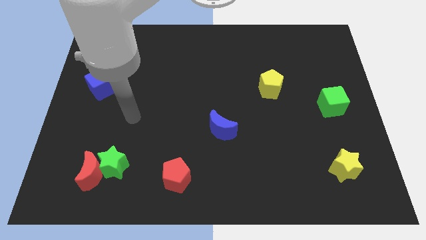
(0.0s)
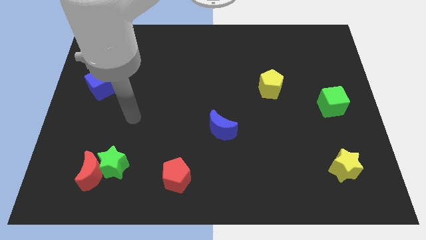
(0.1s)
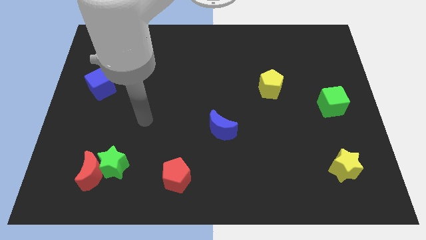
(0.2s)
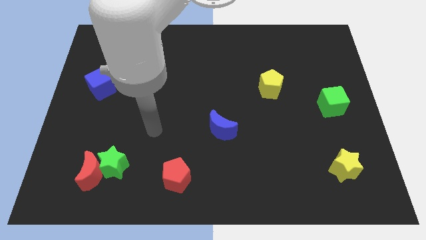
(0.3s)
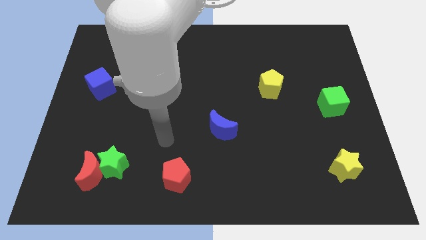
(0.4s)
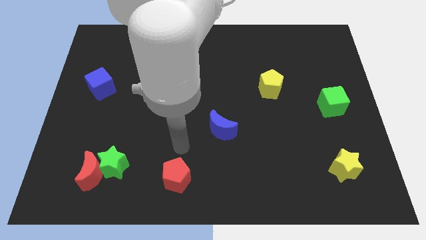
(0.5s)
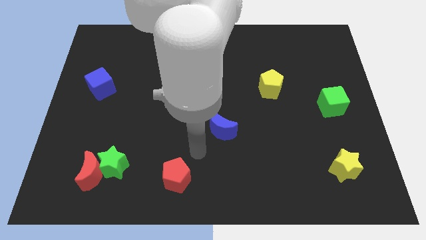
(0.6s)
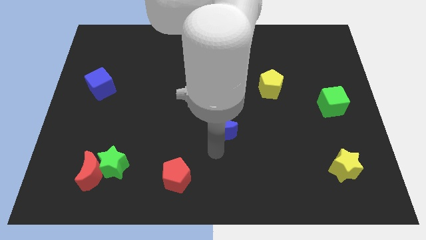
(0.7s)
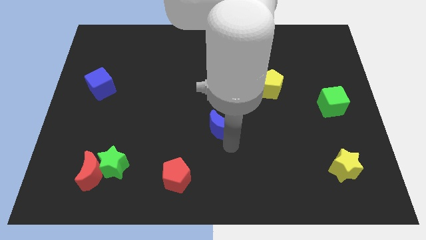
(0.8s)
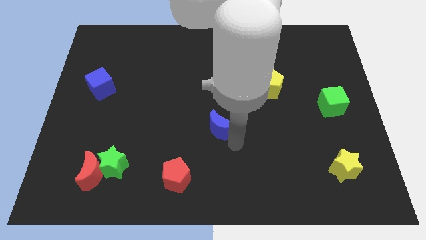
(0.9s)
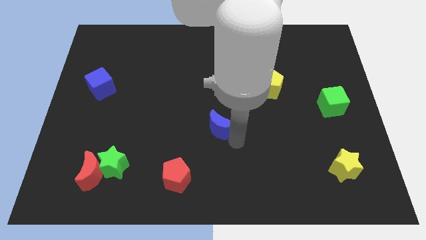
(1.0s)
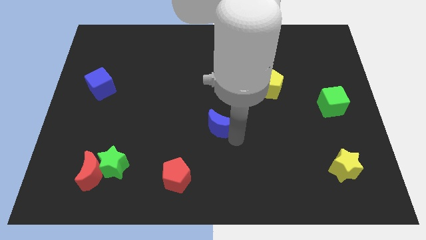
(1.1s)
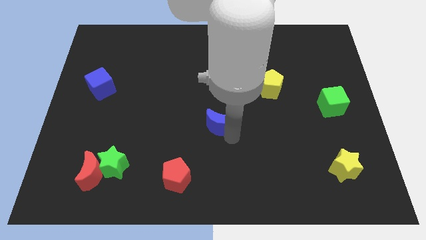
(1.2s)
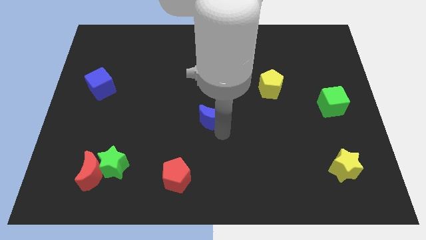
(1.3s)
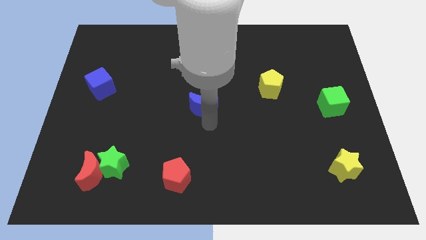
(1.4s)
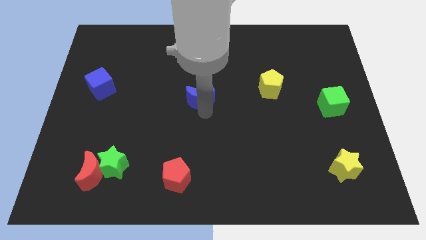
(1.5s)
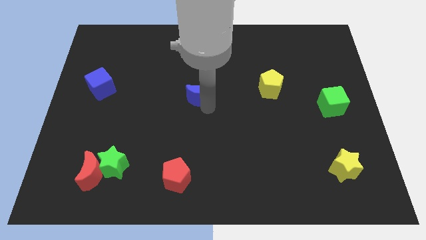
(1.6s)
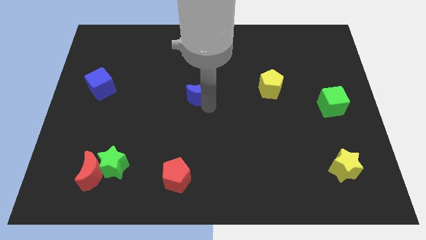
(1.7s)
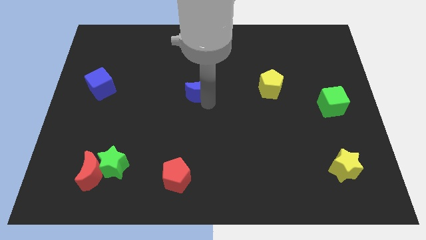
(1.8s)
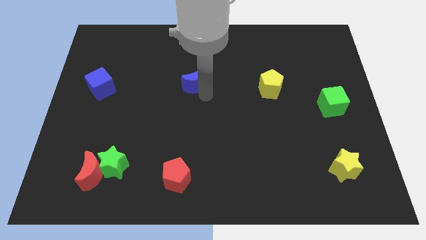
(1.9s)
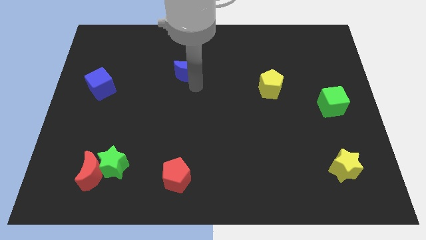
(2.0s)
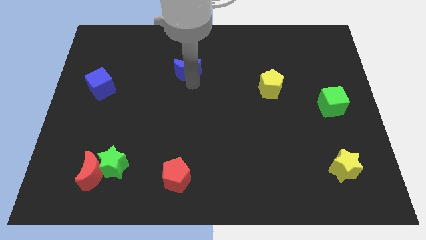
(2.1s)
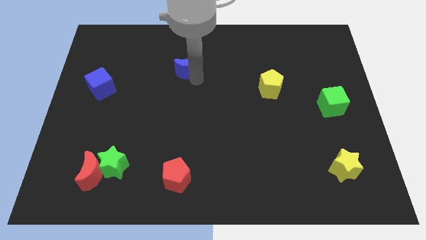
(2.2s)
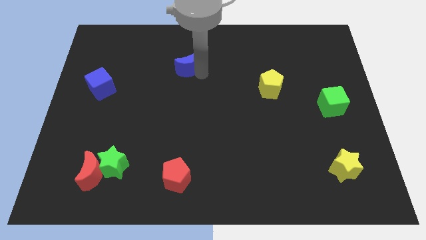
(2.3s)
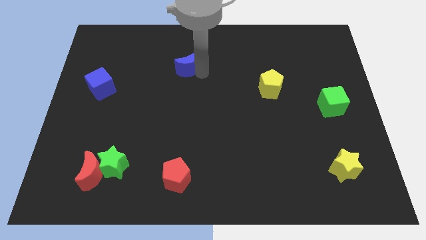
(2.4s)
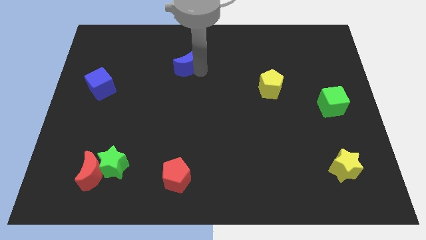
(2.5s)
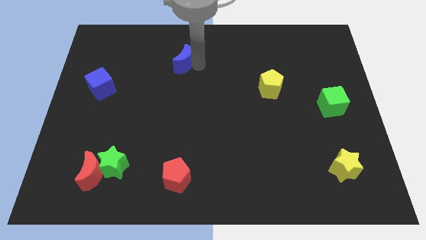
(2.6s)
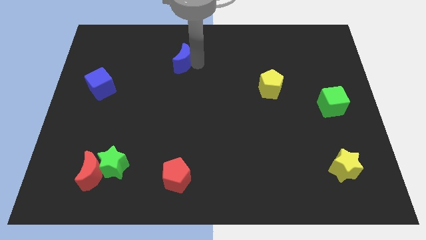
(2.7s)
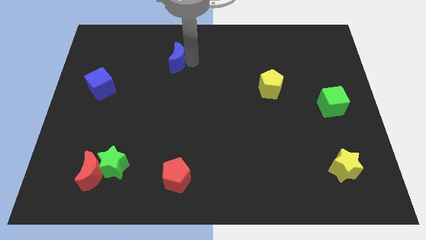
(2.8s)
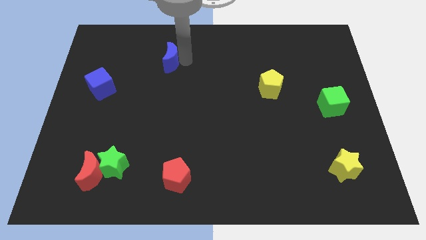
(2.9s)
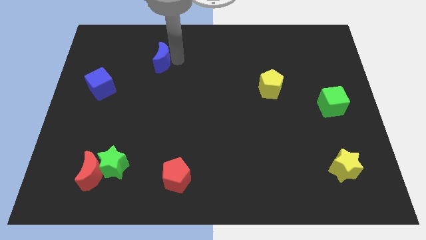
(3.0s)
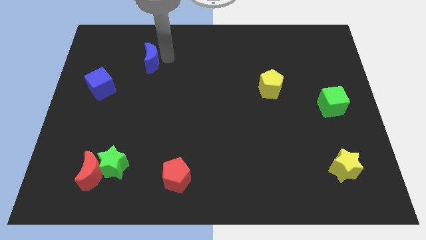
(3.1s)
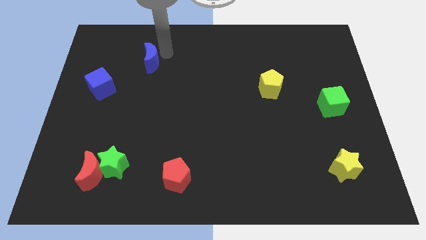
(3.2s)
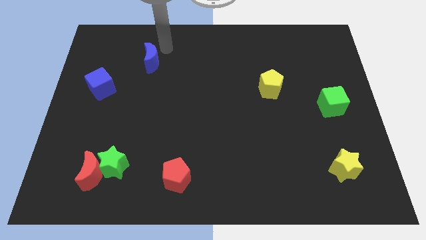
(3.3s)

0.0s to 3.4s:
move the blue crescent towards the blue cube

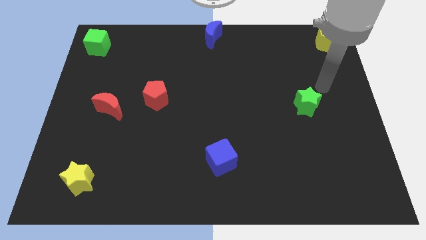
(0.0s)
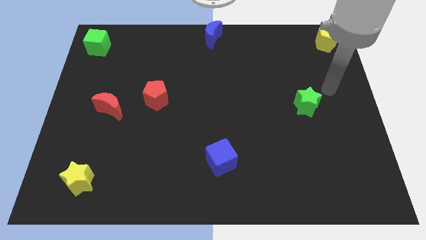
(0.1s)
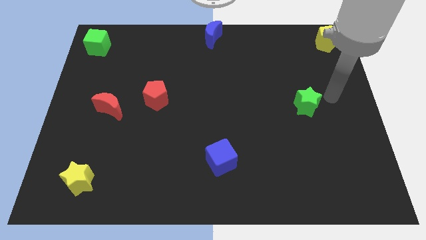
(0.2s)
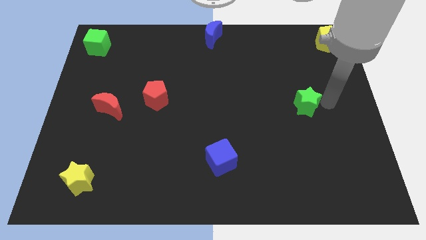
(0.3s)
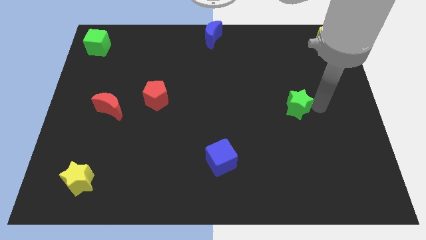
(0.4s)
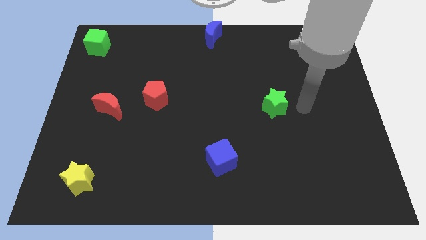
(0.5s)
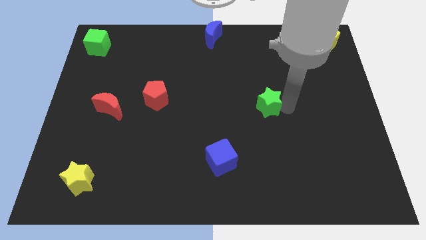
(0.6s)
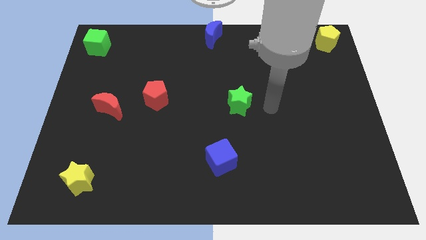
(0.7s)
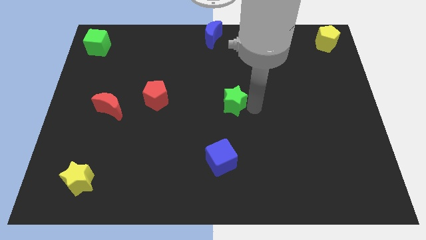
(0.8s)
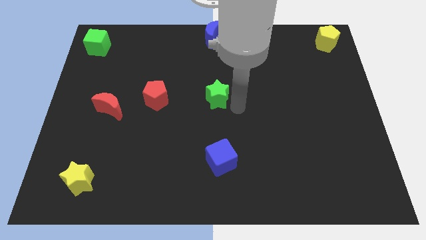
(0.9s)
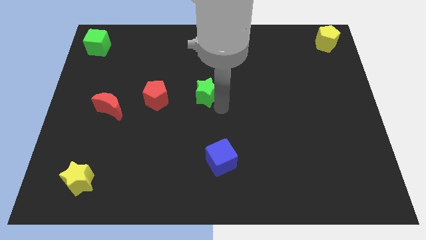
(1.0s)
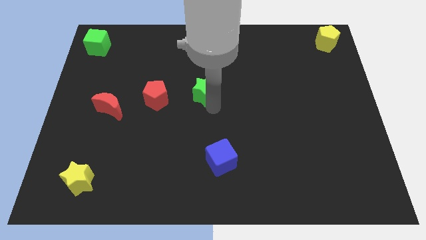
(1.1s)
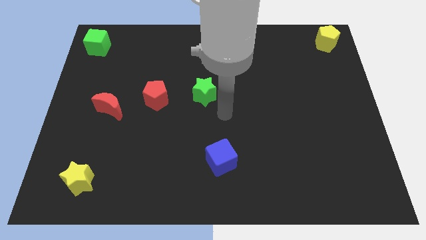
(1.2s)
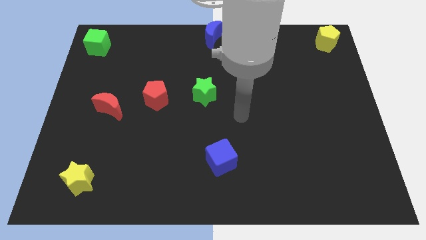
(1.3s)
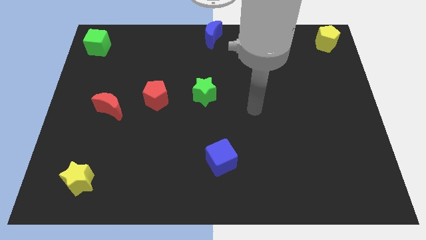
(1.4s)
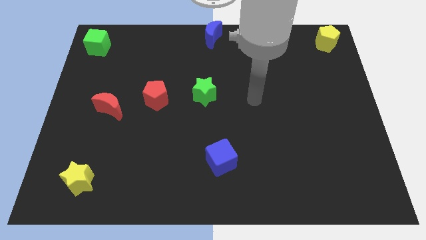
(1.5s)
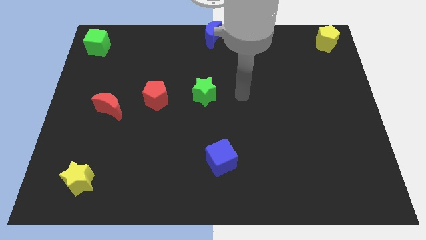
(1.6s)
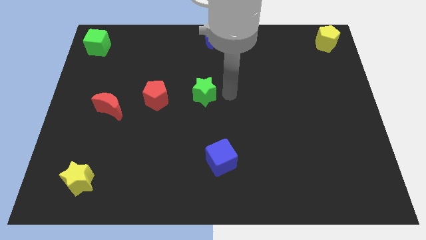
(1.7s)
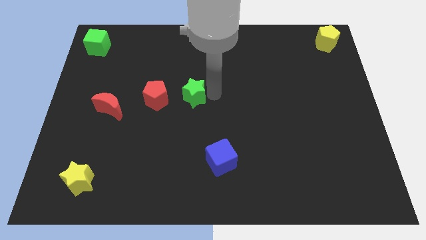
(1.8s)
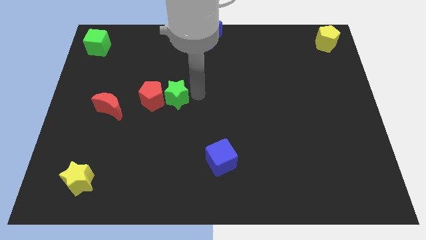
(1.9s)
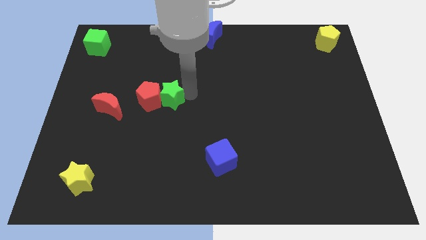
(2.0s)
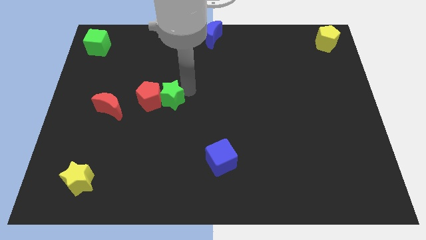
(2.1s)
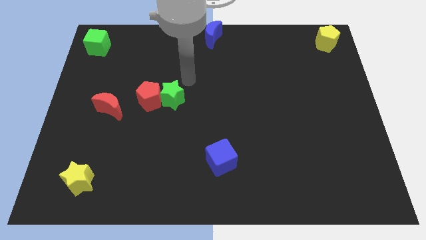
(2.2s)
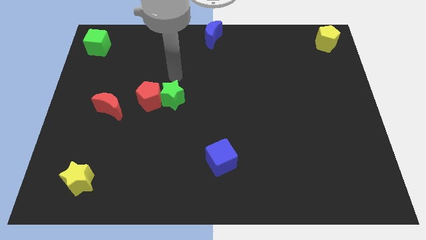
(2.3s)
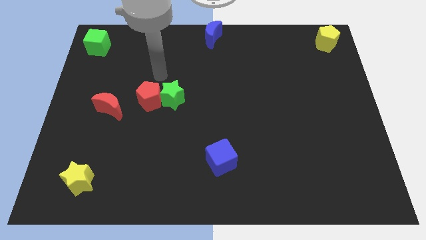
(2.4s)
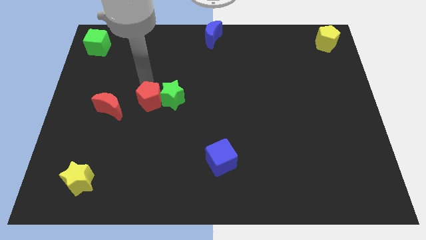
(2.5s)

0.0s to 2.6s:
move green star into red pentagon

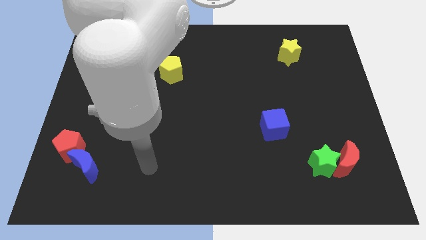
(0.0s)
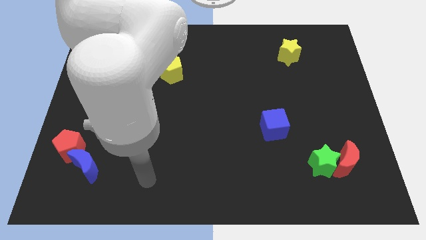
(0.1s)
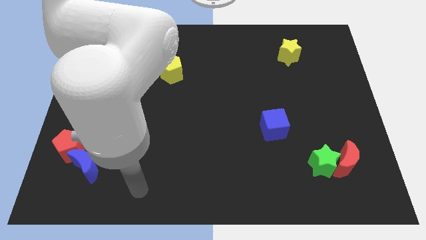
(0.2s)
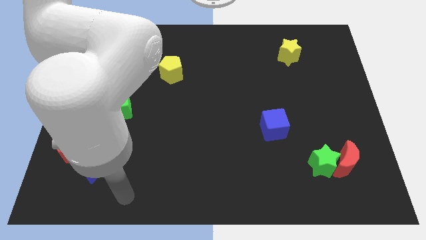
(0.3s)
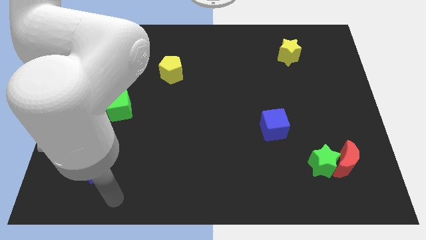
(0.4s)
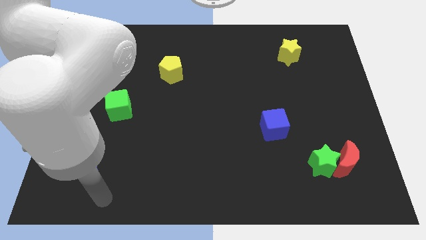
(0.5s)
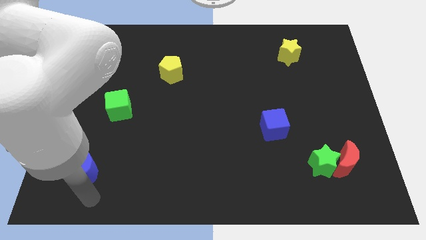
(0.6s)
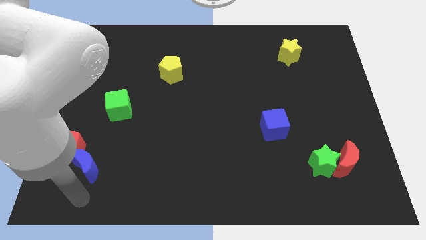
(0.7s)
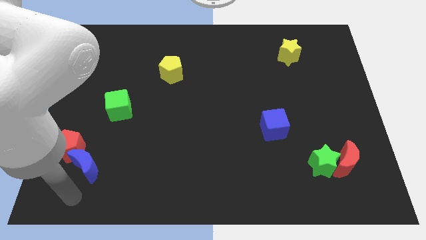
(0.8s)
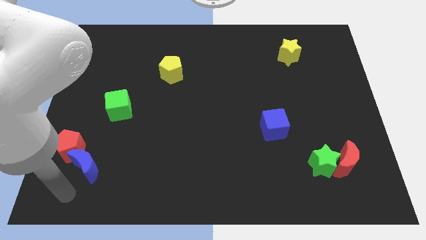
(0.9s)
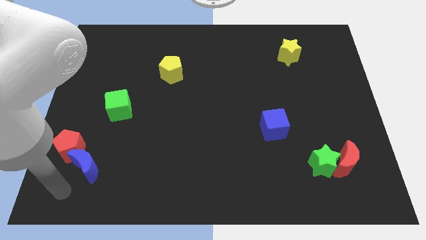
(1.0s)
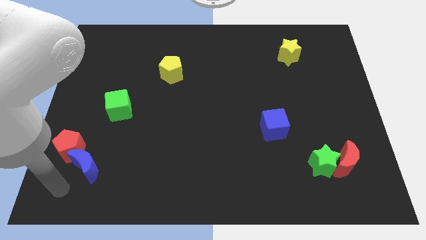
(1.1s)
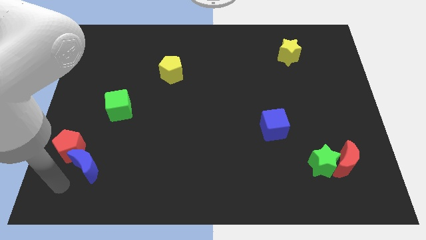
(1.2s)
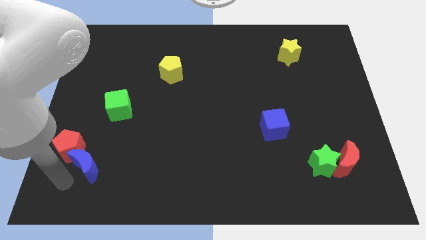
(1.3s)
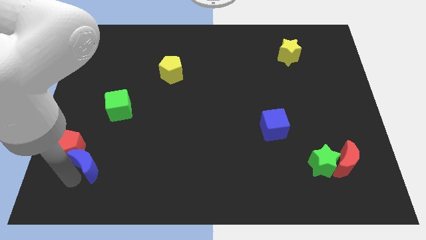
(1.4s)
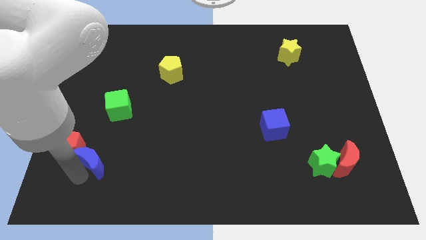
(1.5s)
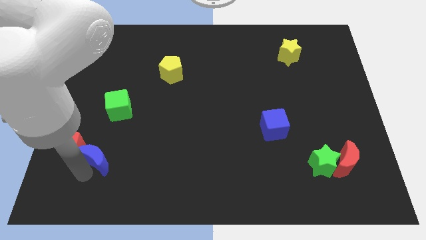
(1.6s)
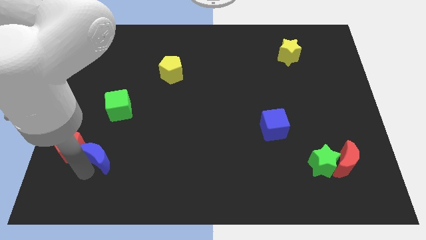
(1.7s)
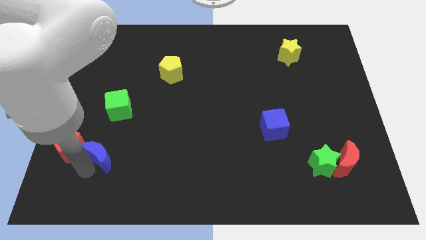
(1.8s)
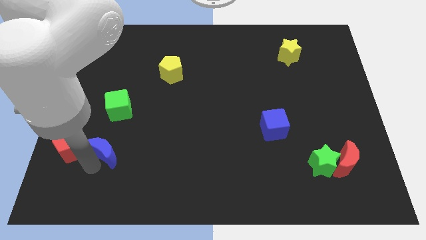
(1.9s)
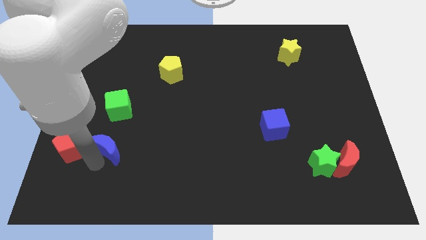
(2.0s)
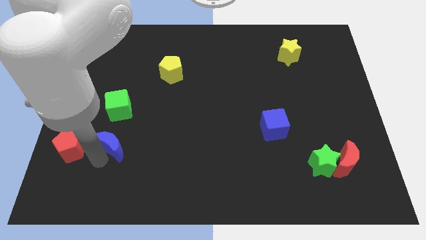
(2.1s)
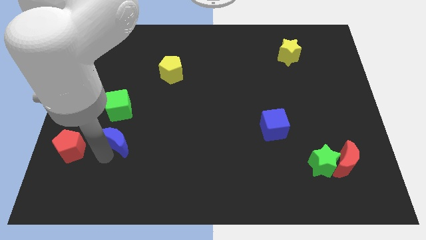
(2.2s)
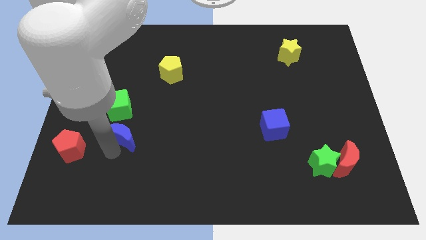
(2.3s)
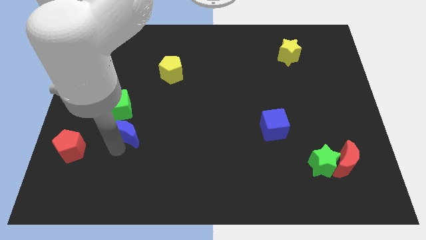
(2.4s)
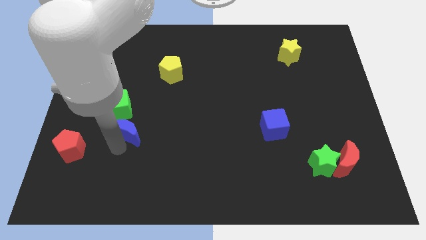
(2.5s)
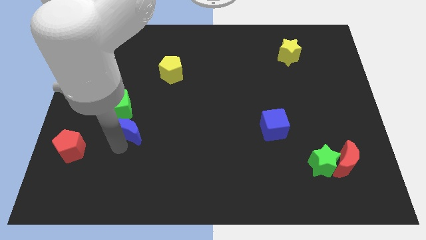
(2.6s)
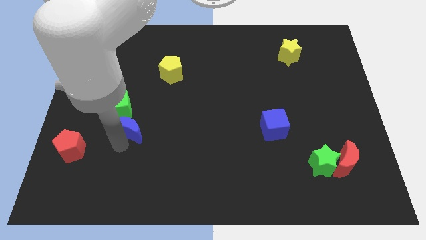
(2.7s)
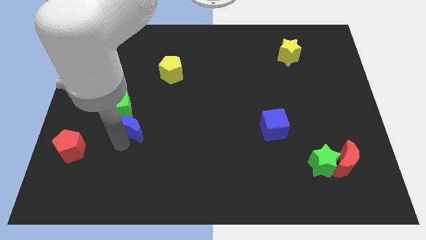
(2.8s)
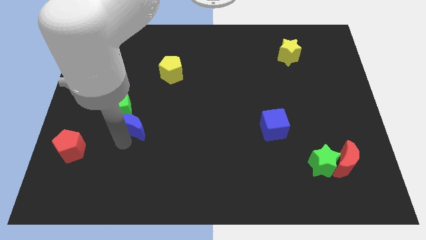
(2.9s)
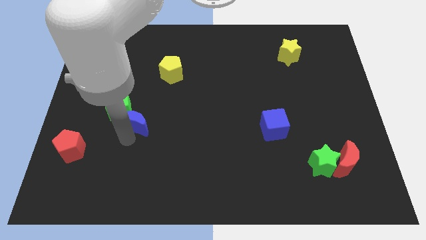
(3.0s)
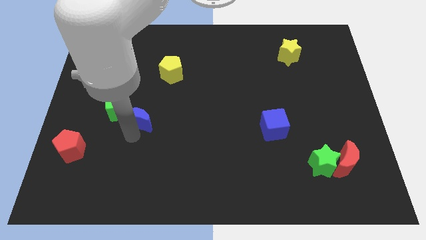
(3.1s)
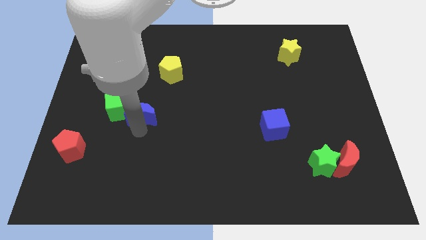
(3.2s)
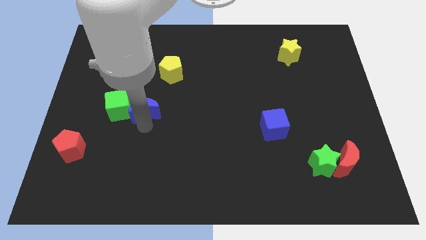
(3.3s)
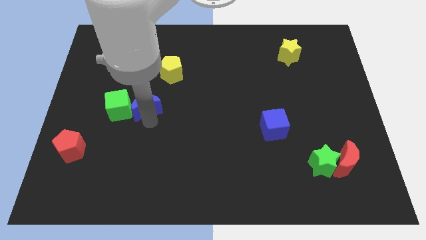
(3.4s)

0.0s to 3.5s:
push blue crescent right to green cube
